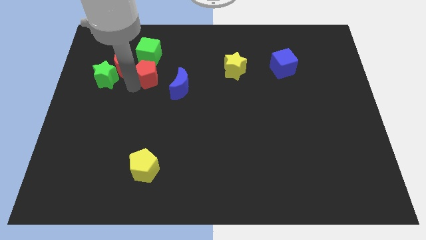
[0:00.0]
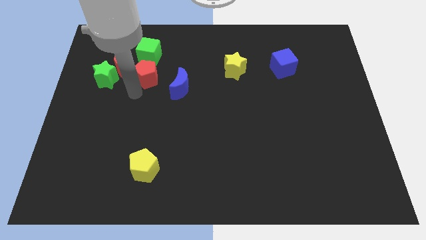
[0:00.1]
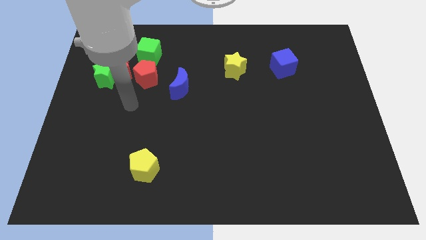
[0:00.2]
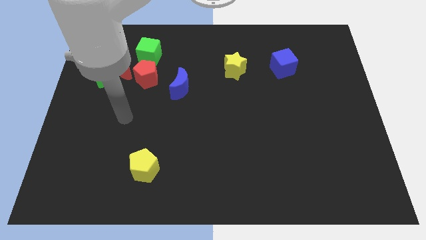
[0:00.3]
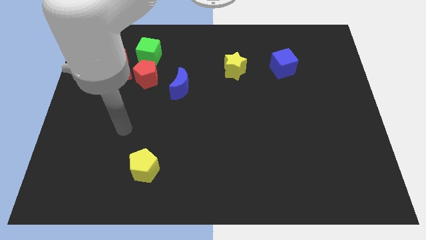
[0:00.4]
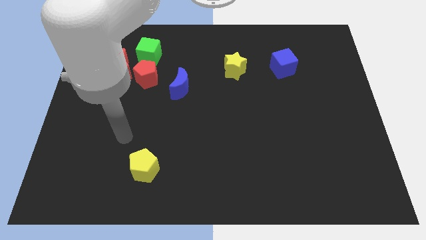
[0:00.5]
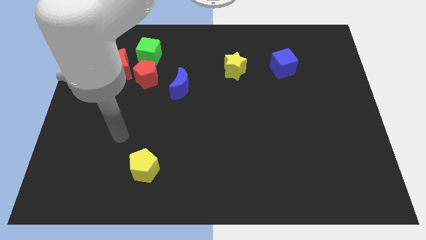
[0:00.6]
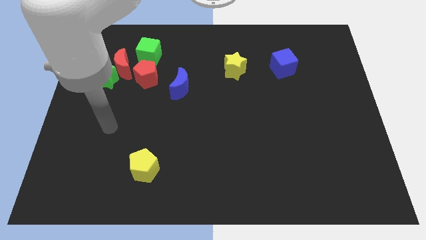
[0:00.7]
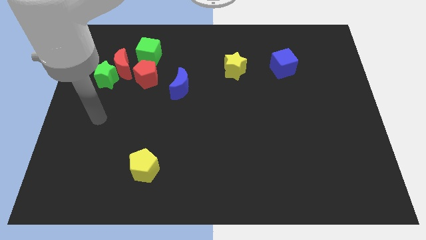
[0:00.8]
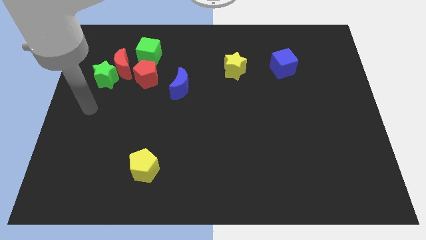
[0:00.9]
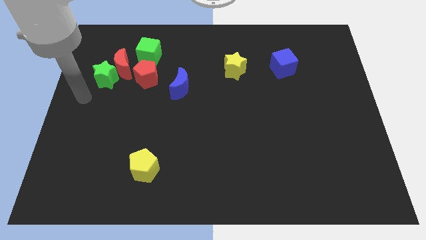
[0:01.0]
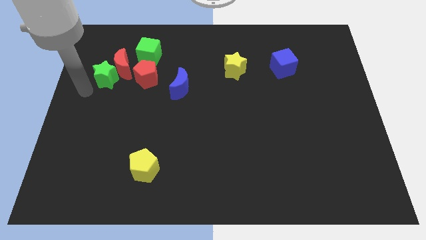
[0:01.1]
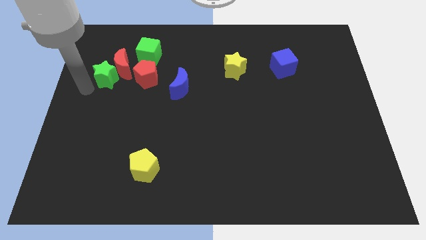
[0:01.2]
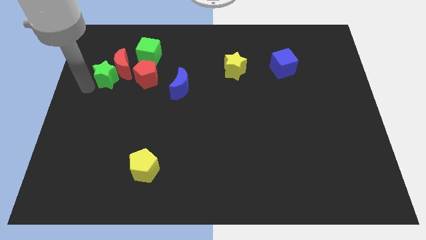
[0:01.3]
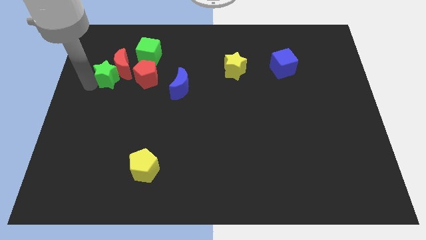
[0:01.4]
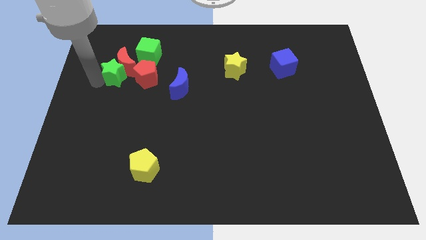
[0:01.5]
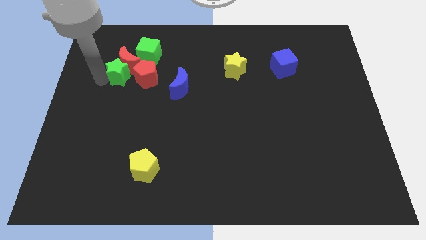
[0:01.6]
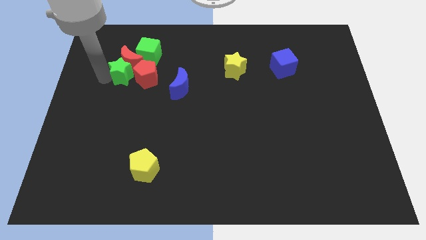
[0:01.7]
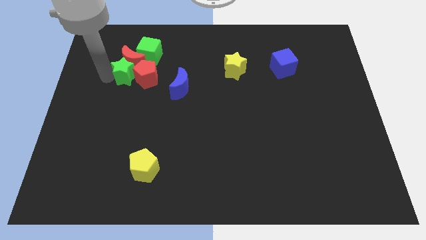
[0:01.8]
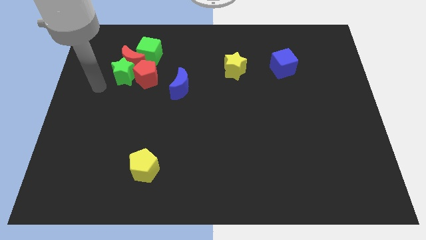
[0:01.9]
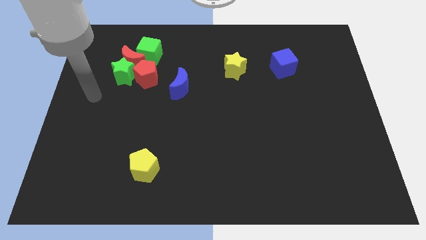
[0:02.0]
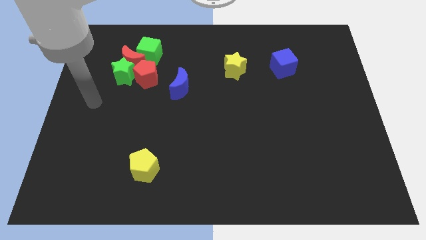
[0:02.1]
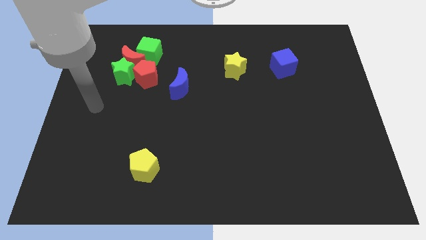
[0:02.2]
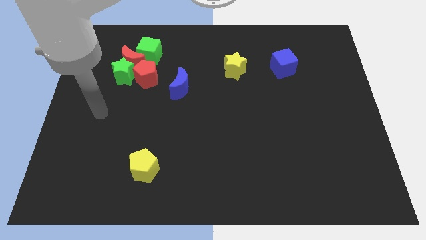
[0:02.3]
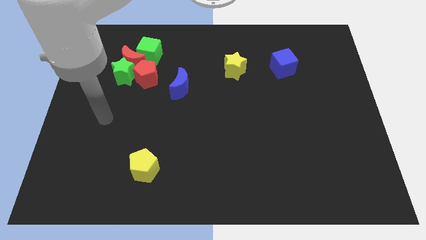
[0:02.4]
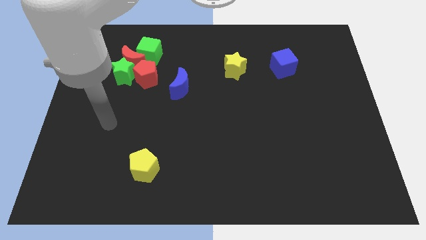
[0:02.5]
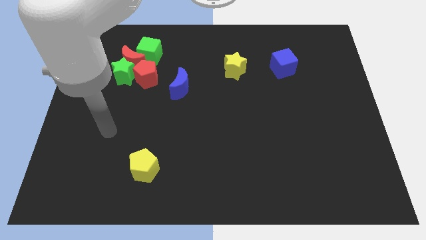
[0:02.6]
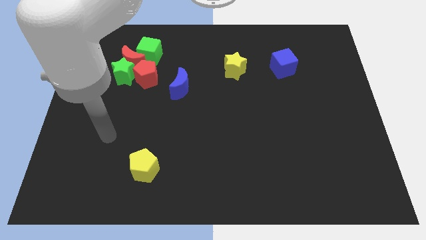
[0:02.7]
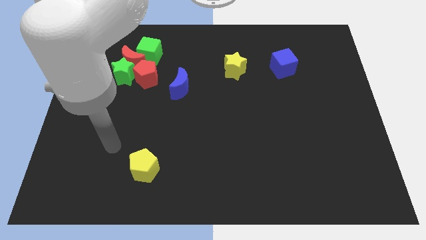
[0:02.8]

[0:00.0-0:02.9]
push the red crescent green star towards the green cube and move away

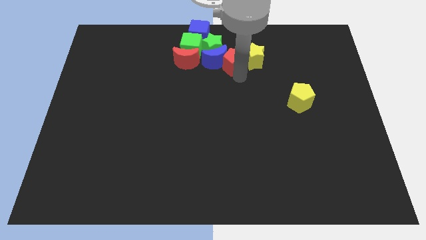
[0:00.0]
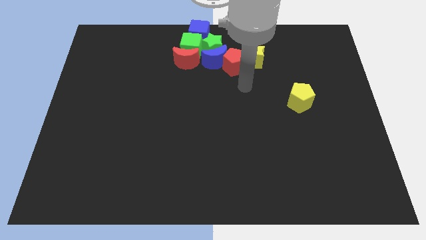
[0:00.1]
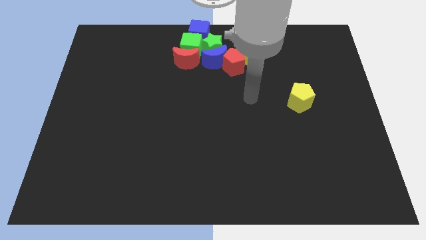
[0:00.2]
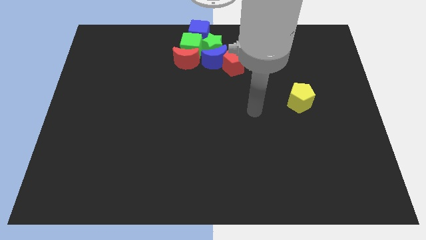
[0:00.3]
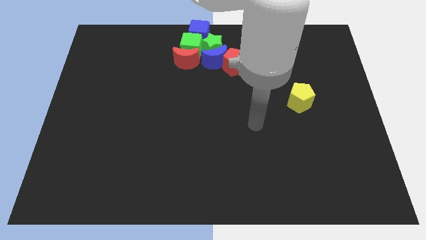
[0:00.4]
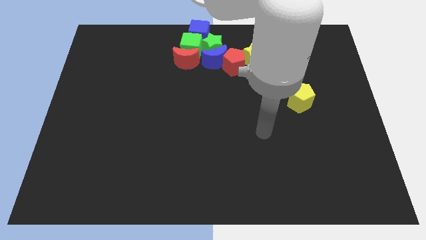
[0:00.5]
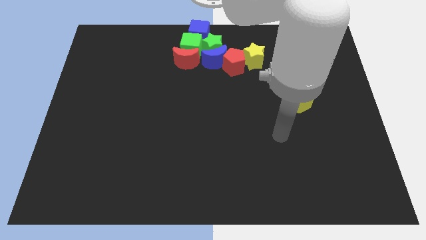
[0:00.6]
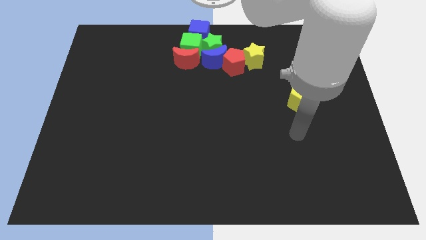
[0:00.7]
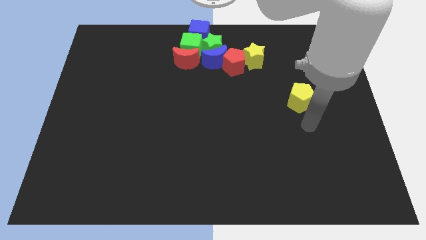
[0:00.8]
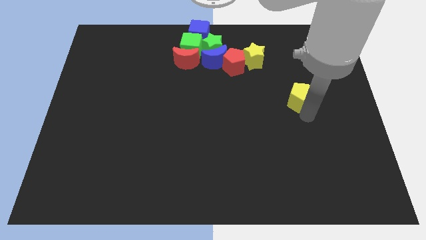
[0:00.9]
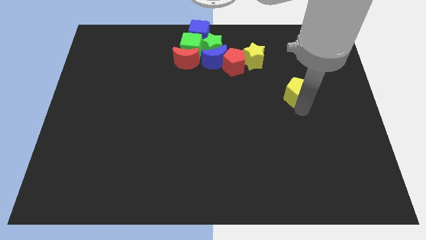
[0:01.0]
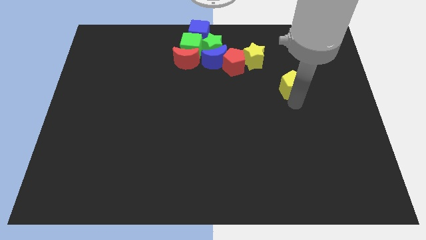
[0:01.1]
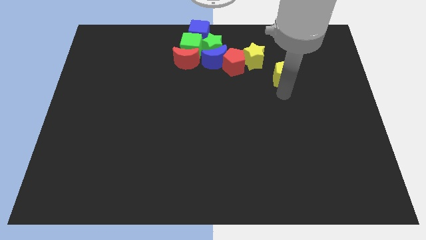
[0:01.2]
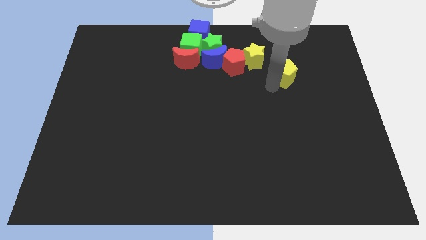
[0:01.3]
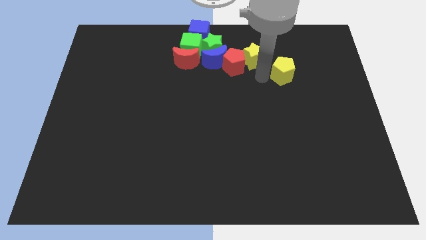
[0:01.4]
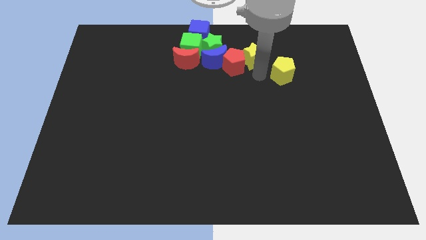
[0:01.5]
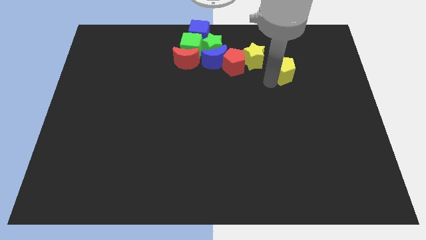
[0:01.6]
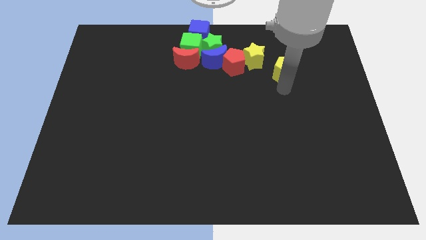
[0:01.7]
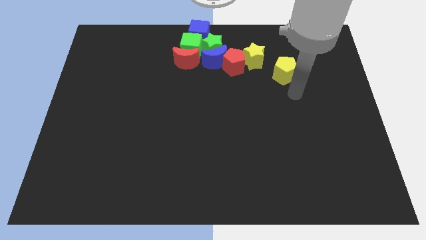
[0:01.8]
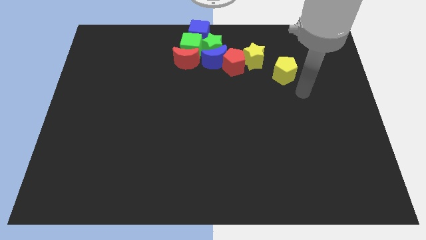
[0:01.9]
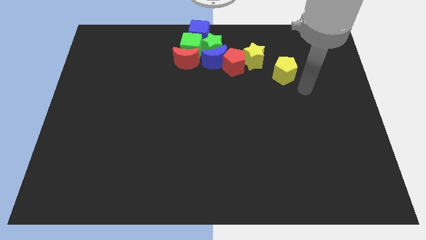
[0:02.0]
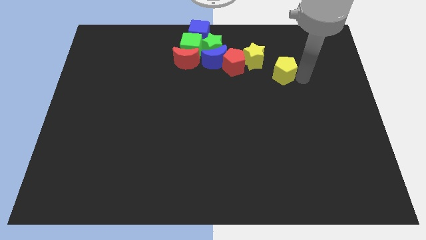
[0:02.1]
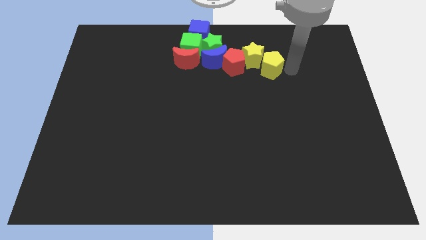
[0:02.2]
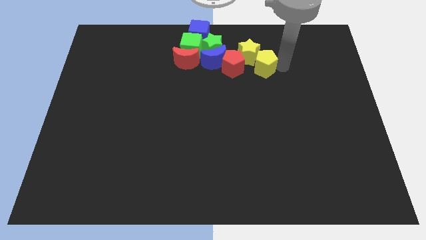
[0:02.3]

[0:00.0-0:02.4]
push the yellow pentagon into the red pentagon and yellow star

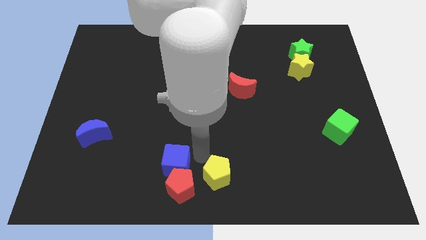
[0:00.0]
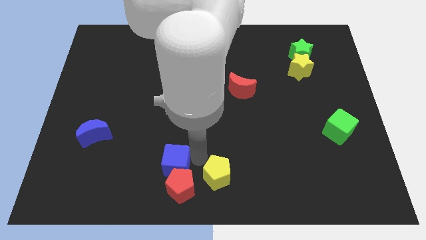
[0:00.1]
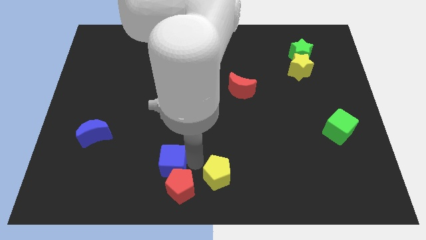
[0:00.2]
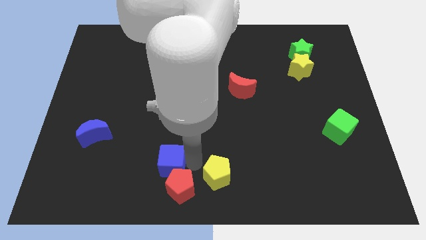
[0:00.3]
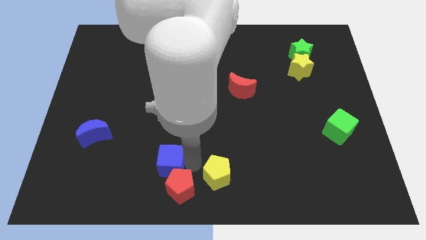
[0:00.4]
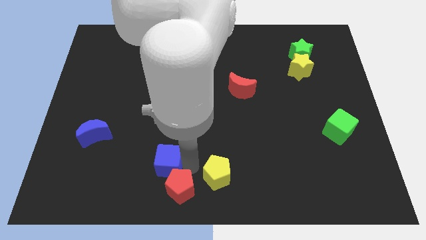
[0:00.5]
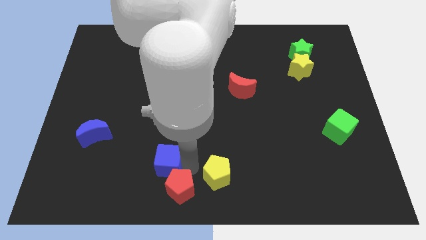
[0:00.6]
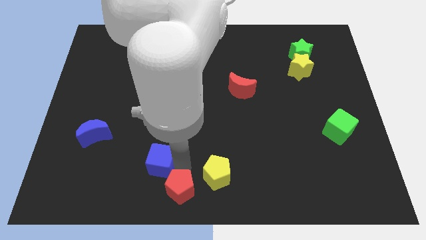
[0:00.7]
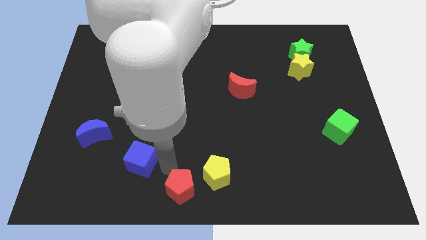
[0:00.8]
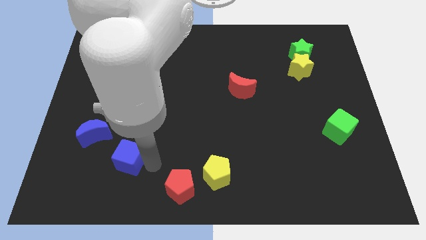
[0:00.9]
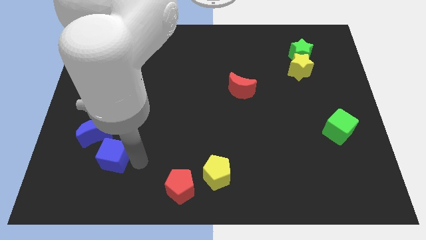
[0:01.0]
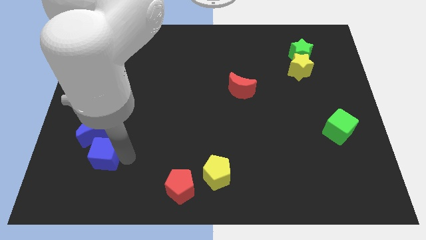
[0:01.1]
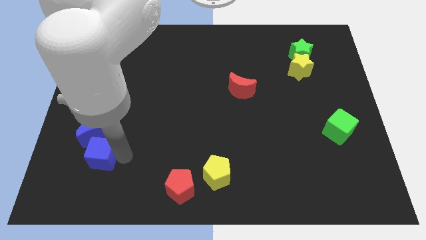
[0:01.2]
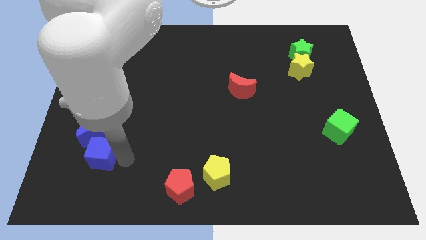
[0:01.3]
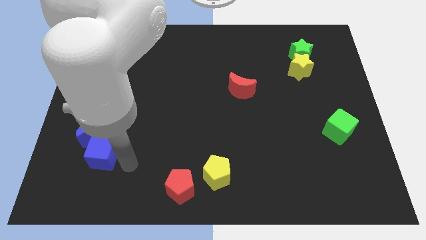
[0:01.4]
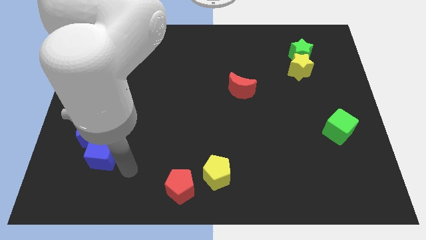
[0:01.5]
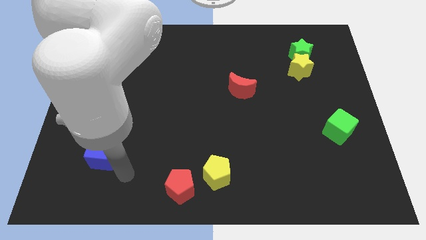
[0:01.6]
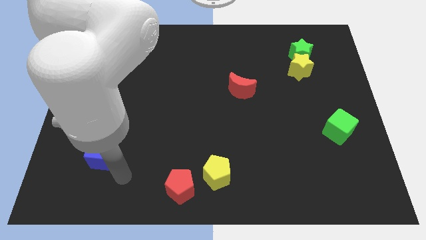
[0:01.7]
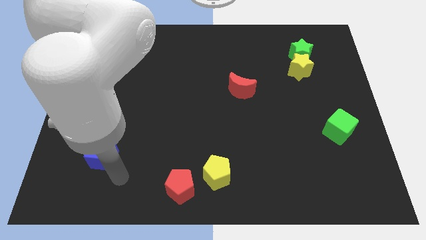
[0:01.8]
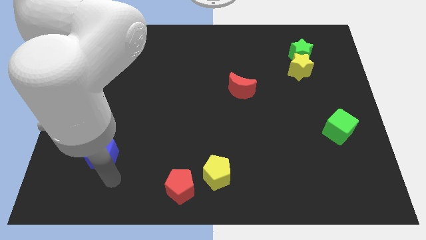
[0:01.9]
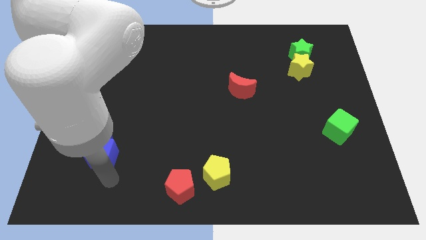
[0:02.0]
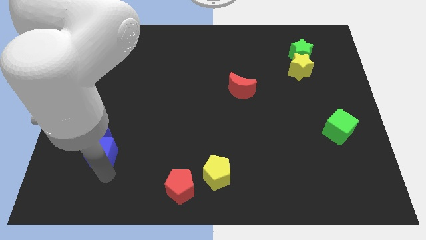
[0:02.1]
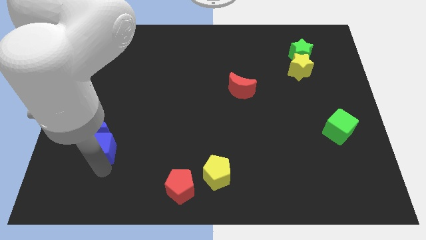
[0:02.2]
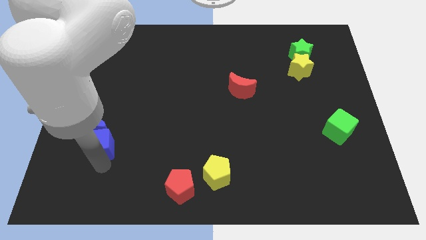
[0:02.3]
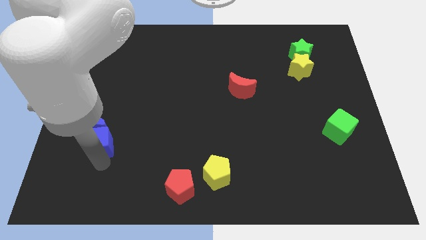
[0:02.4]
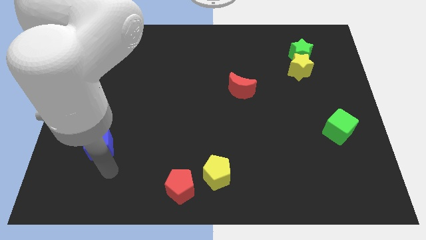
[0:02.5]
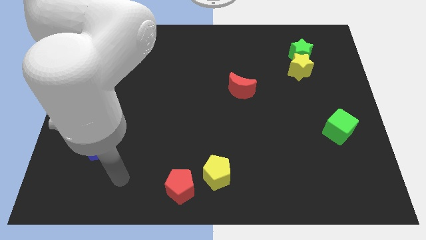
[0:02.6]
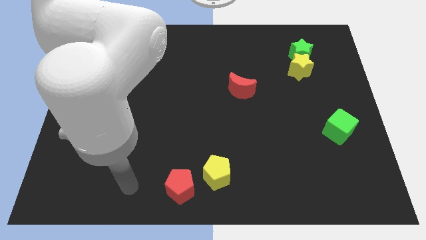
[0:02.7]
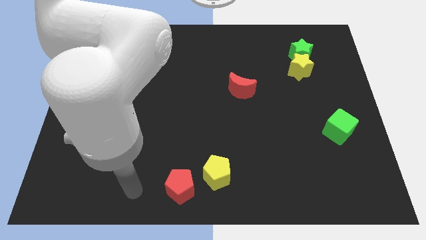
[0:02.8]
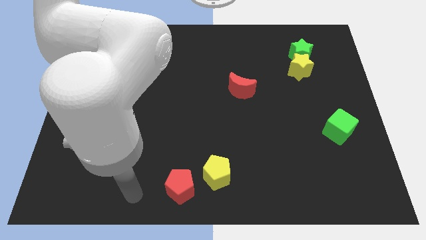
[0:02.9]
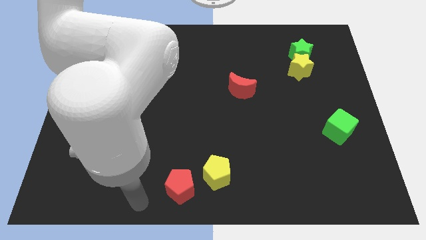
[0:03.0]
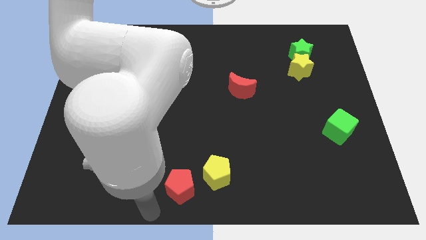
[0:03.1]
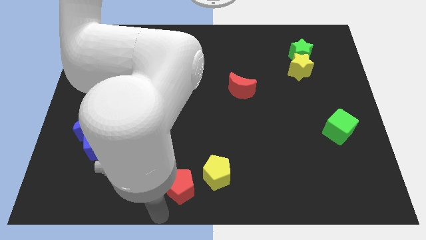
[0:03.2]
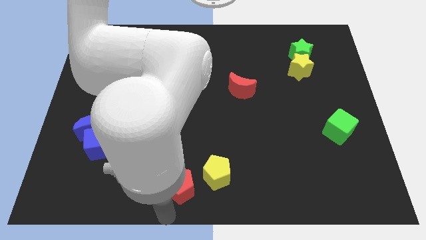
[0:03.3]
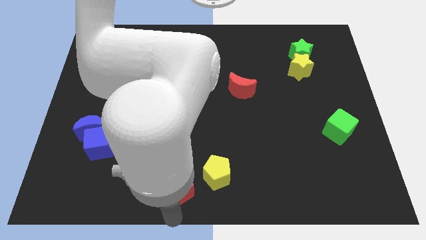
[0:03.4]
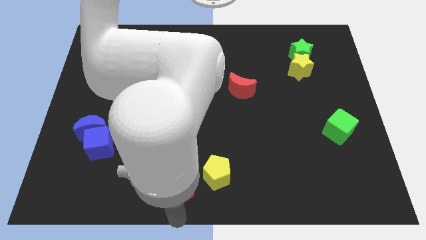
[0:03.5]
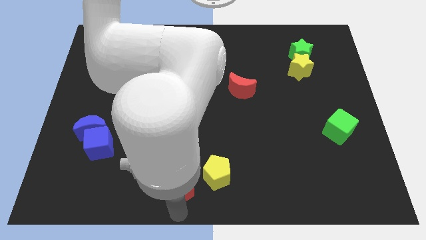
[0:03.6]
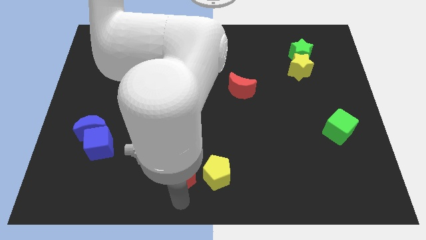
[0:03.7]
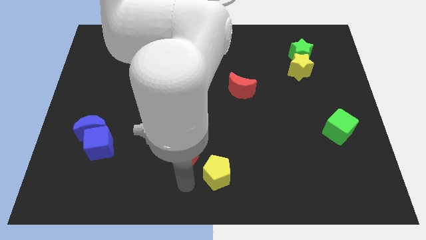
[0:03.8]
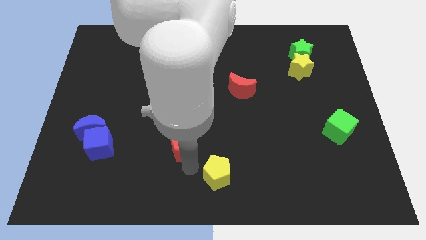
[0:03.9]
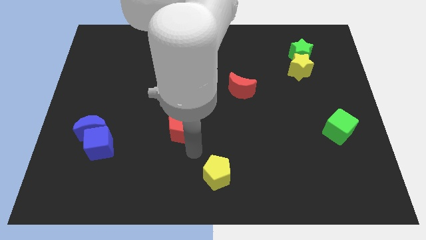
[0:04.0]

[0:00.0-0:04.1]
separate the blue cube and red pentagon
